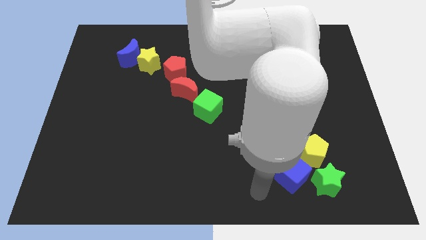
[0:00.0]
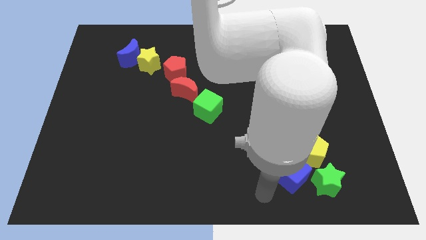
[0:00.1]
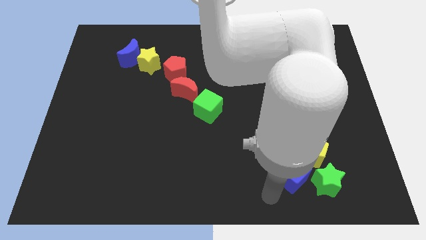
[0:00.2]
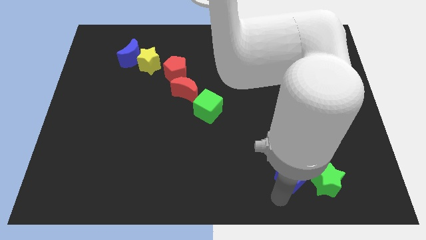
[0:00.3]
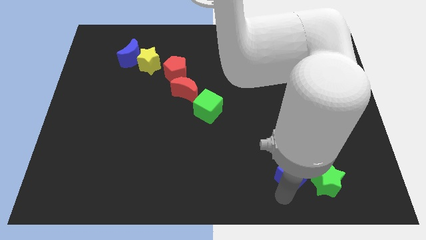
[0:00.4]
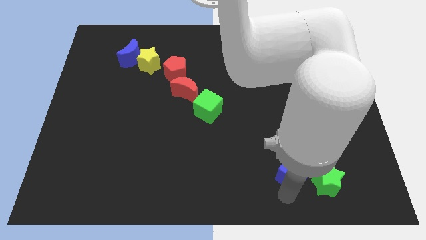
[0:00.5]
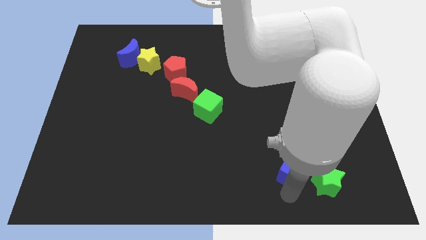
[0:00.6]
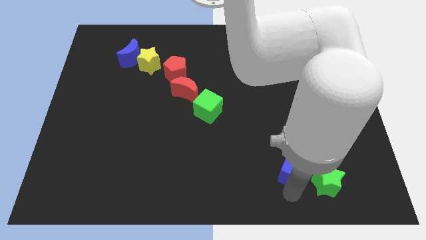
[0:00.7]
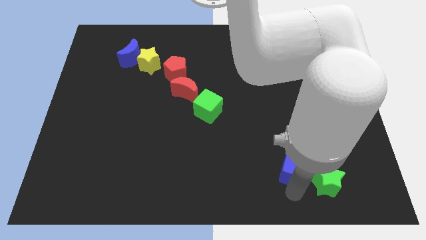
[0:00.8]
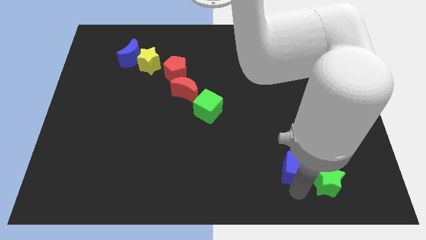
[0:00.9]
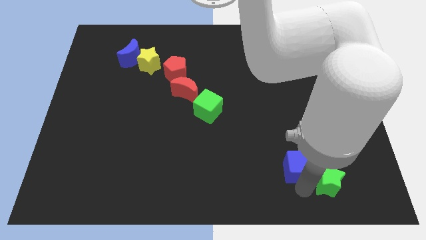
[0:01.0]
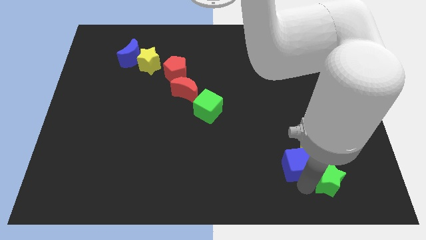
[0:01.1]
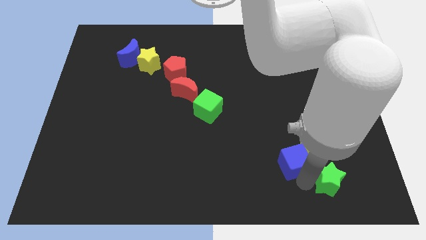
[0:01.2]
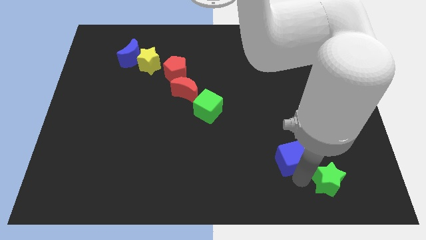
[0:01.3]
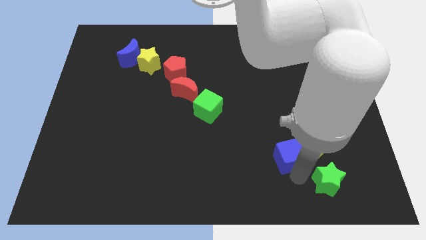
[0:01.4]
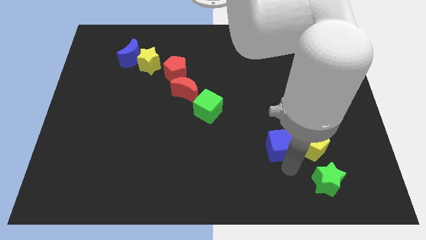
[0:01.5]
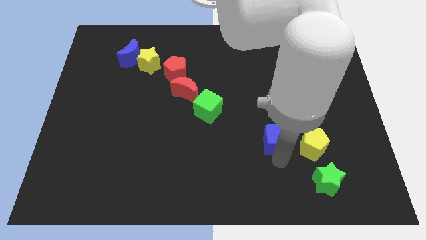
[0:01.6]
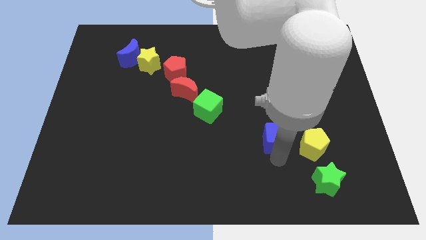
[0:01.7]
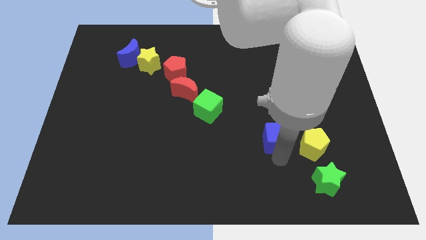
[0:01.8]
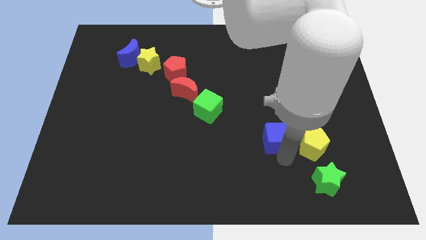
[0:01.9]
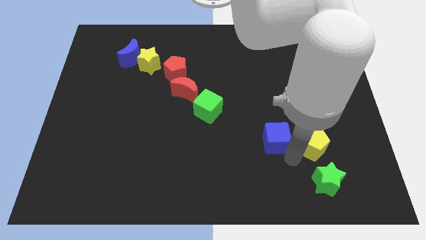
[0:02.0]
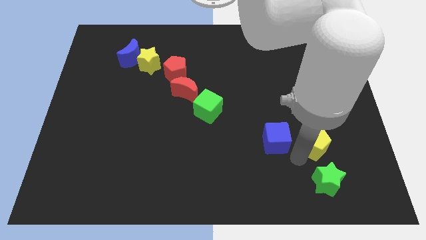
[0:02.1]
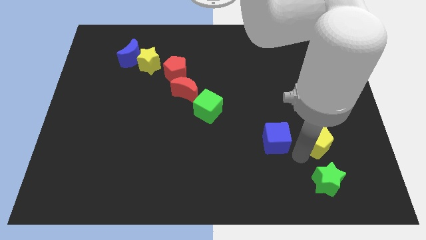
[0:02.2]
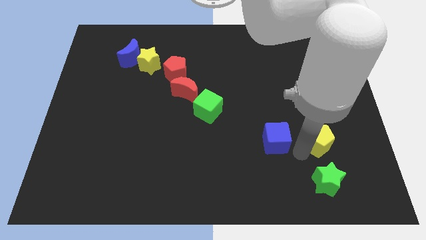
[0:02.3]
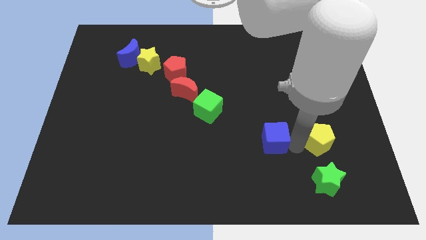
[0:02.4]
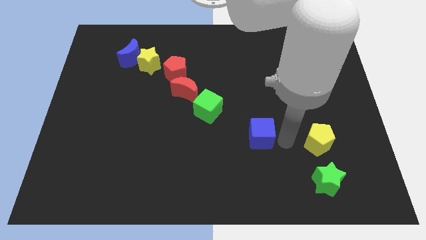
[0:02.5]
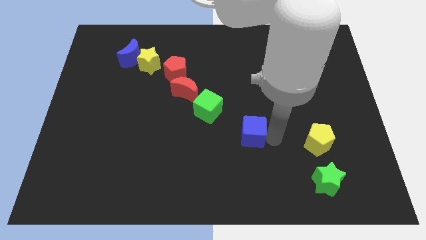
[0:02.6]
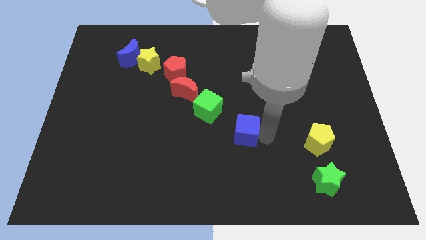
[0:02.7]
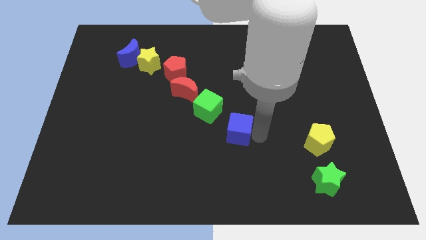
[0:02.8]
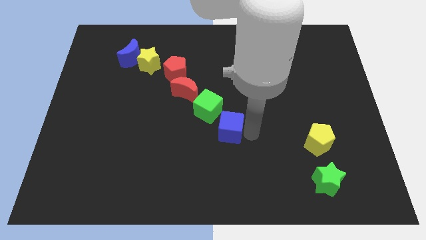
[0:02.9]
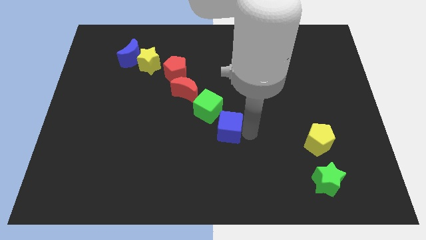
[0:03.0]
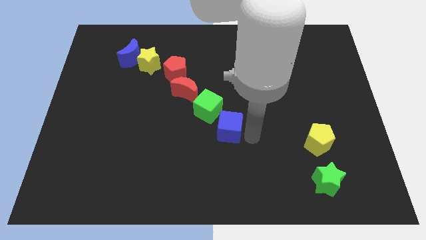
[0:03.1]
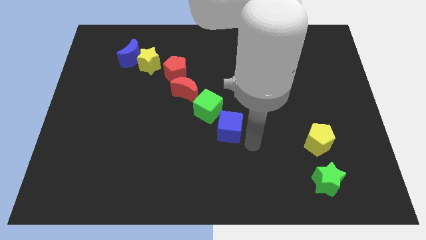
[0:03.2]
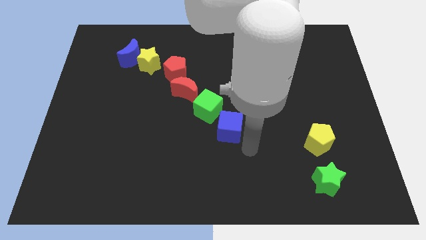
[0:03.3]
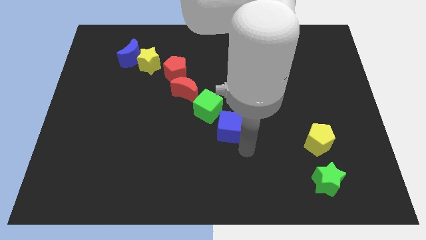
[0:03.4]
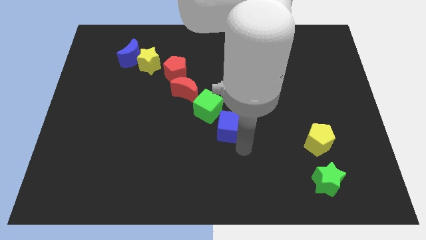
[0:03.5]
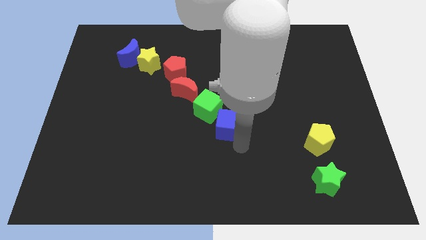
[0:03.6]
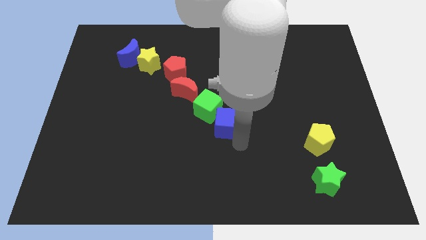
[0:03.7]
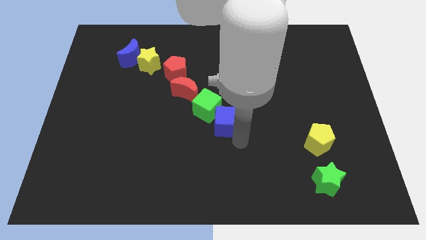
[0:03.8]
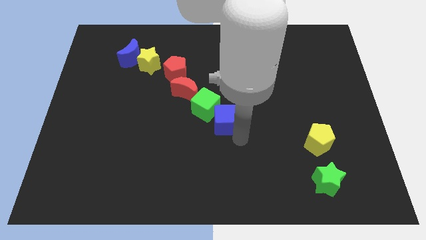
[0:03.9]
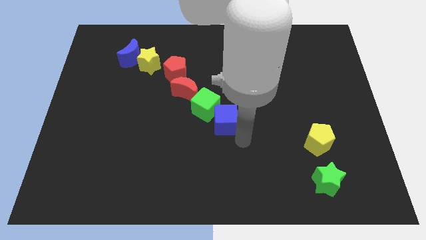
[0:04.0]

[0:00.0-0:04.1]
push the blue cube into the green cube

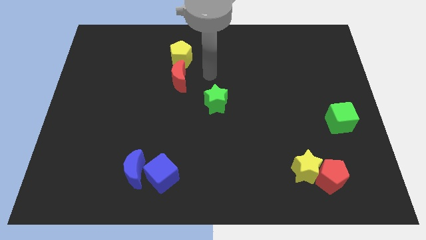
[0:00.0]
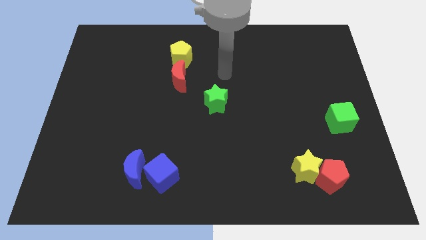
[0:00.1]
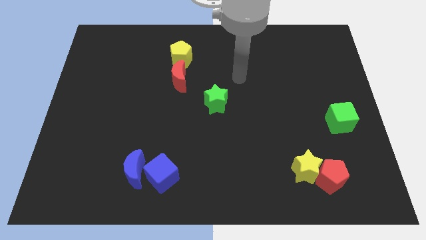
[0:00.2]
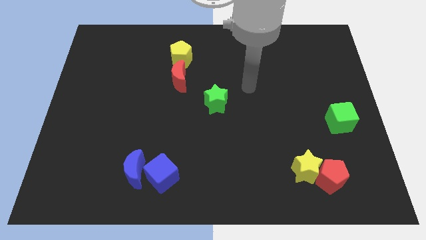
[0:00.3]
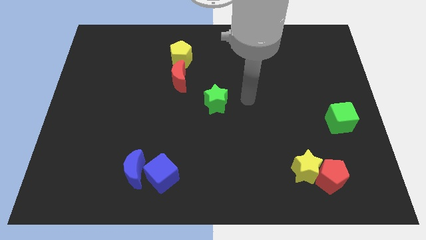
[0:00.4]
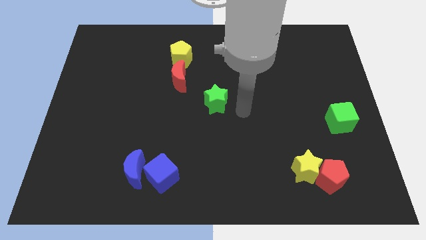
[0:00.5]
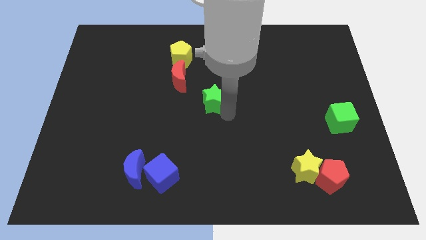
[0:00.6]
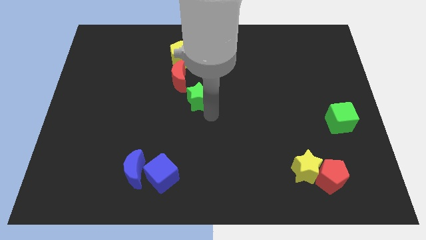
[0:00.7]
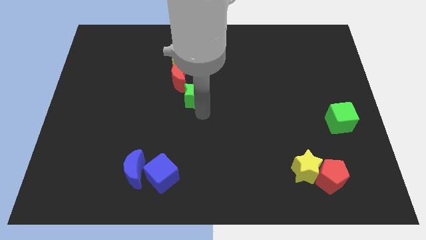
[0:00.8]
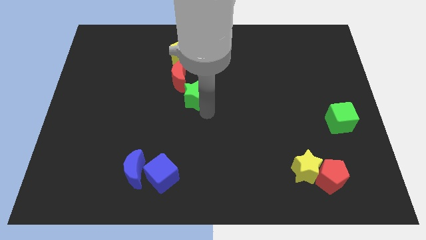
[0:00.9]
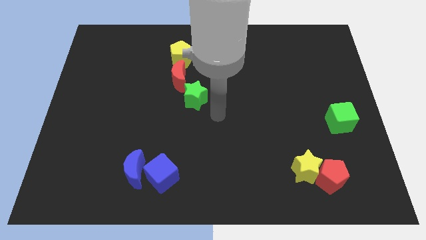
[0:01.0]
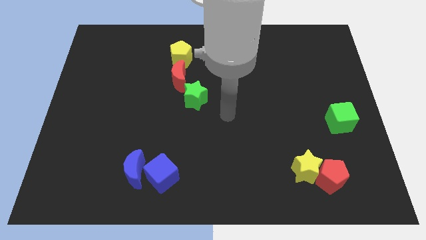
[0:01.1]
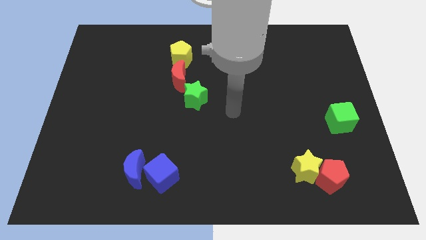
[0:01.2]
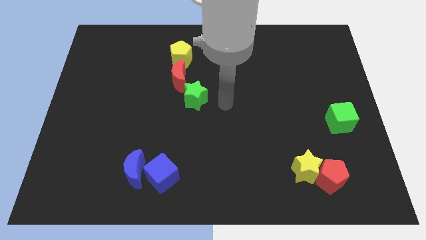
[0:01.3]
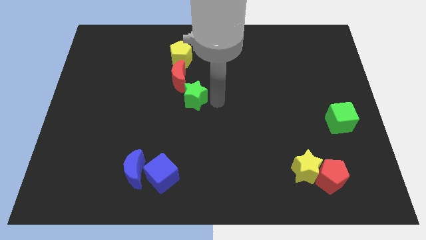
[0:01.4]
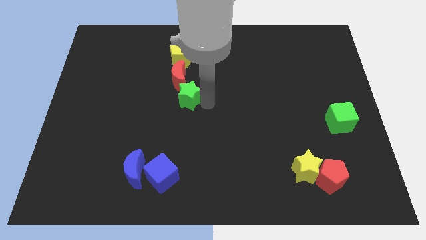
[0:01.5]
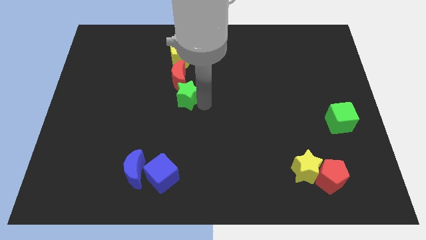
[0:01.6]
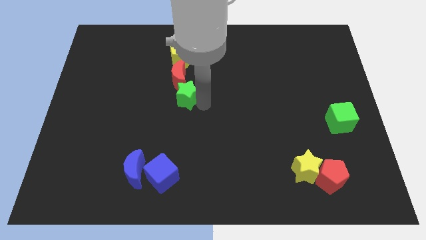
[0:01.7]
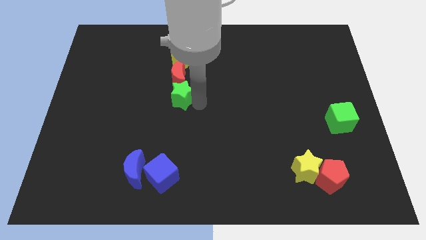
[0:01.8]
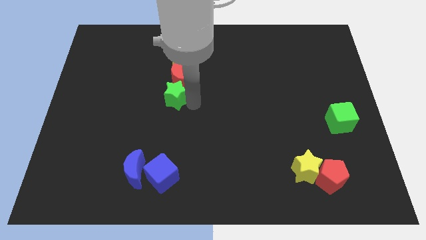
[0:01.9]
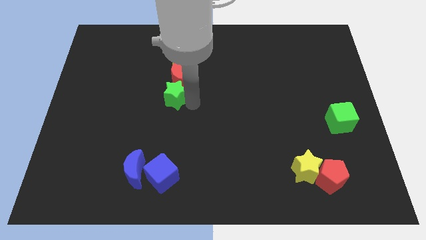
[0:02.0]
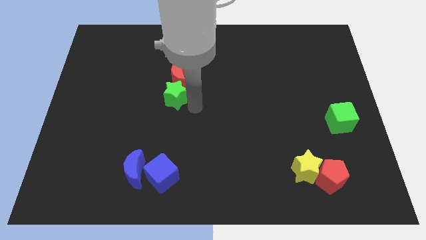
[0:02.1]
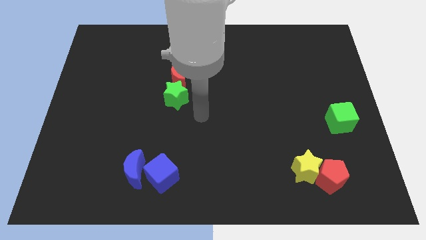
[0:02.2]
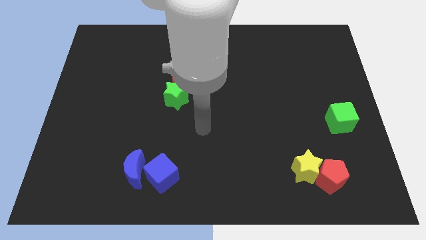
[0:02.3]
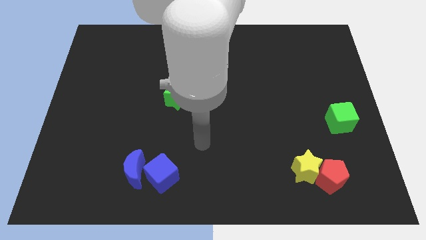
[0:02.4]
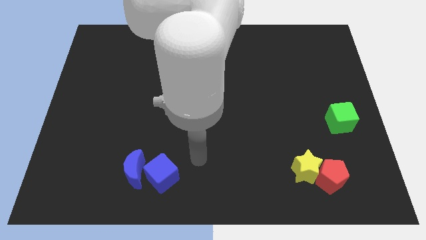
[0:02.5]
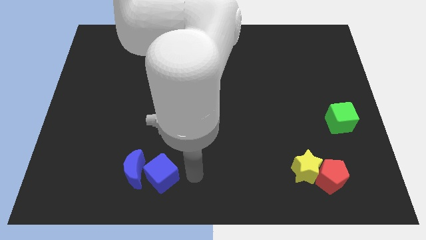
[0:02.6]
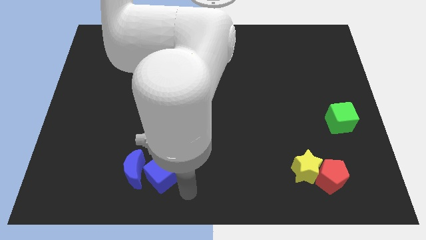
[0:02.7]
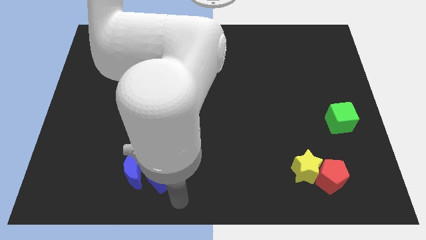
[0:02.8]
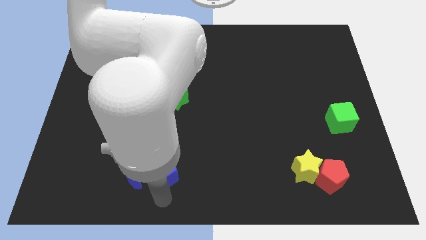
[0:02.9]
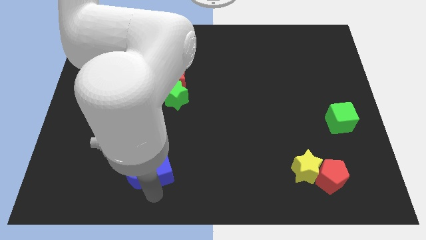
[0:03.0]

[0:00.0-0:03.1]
push the green star below the red moon to form a vertical line

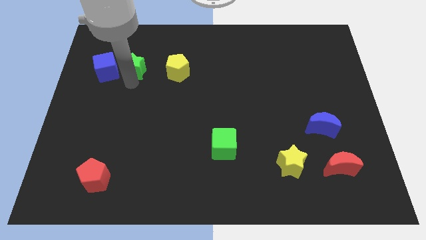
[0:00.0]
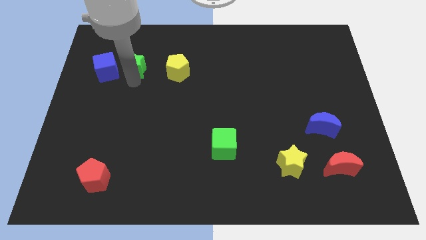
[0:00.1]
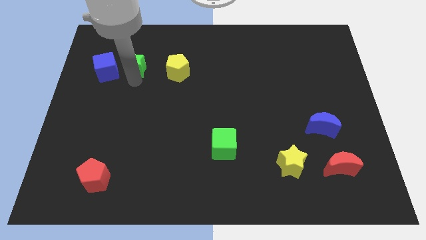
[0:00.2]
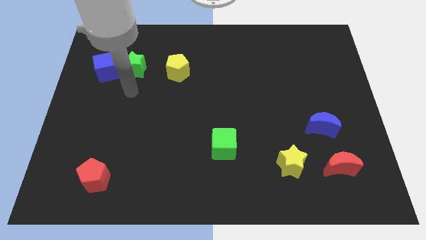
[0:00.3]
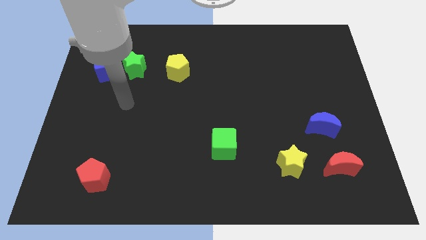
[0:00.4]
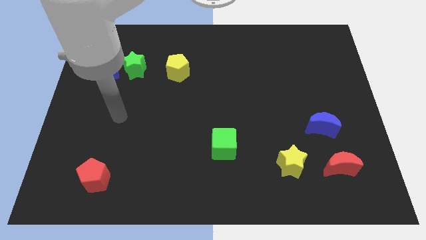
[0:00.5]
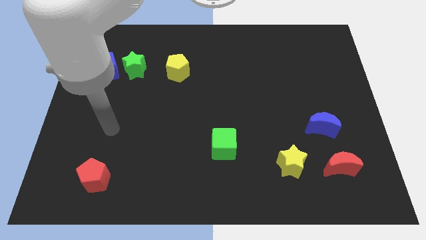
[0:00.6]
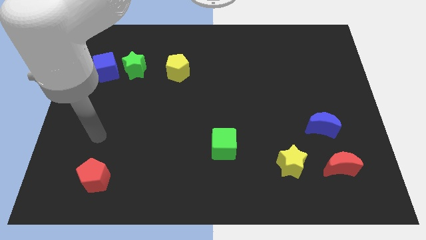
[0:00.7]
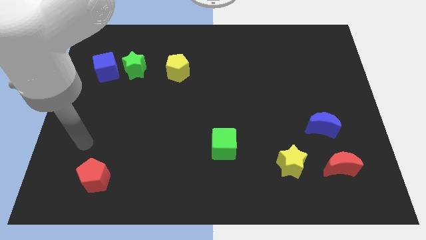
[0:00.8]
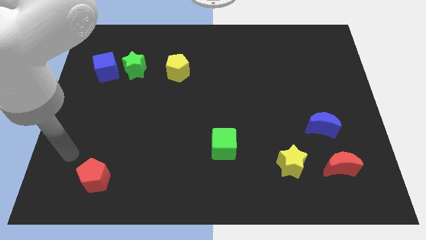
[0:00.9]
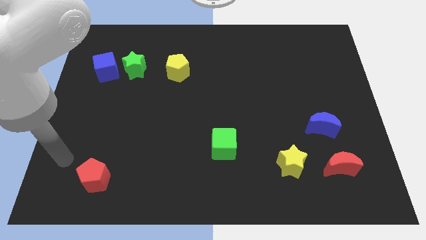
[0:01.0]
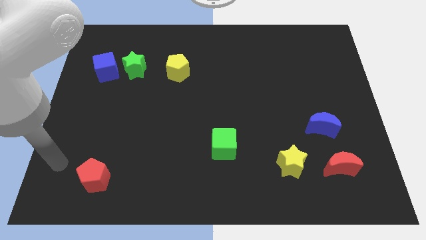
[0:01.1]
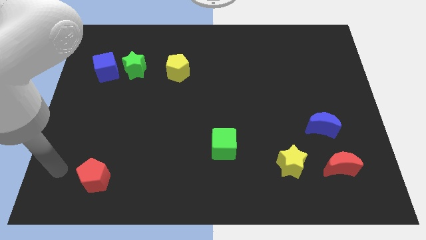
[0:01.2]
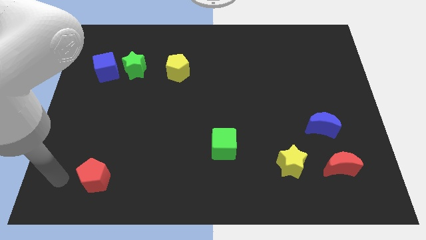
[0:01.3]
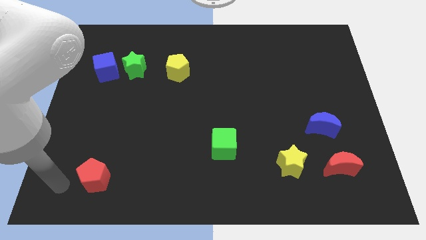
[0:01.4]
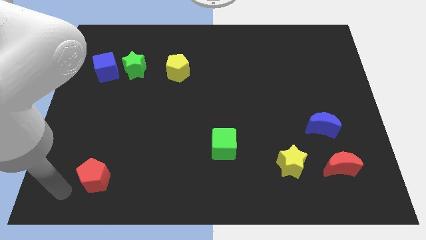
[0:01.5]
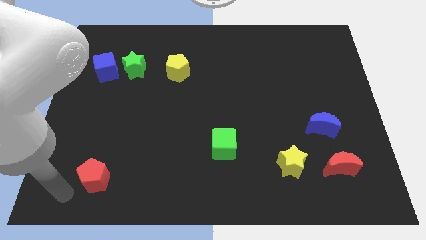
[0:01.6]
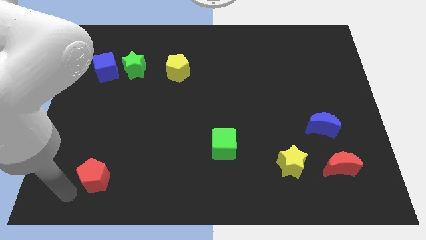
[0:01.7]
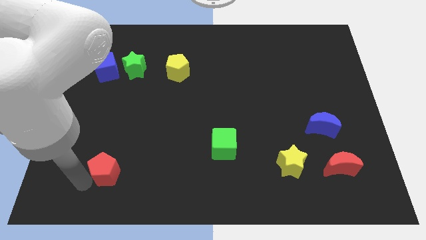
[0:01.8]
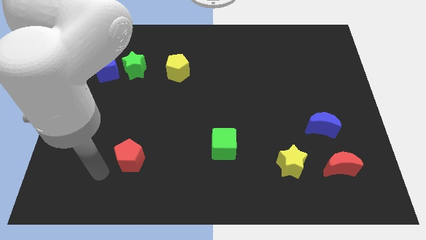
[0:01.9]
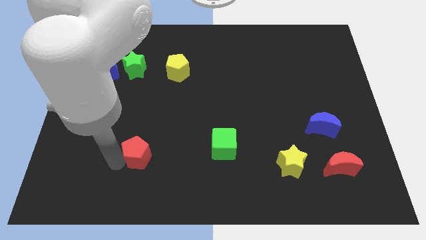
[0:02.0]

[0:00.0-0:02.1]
push the red pentagon towards the center of the board
